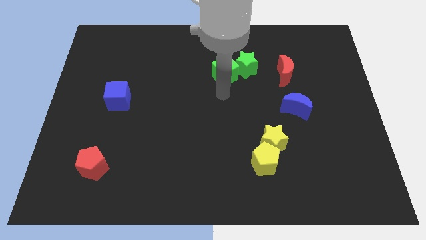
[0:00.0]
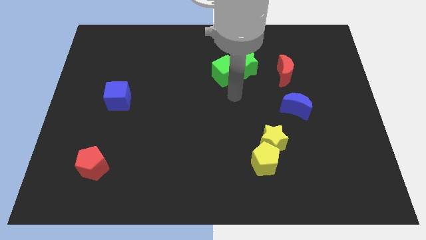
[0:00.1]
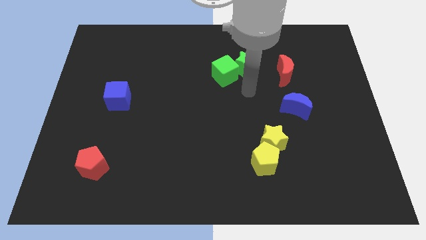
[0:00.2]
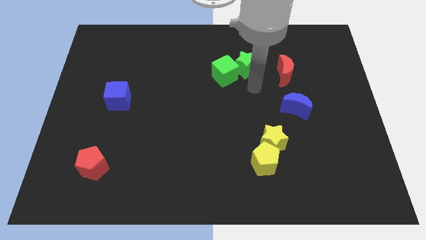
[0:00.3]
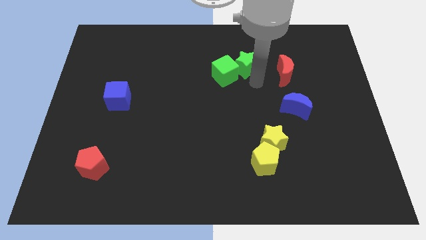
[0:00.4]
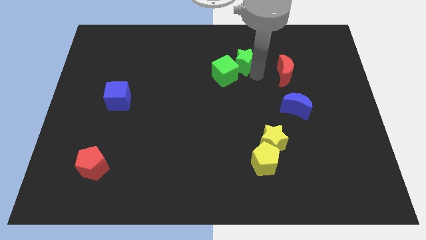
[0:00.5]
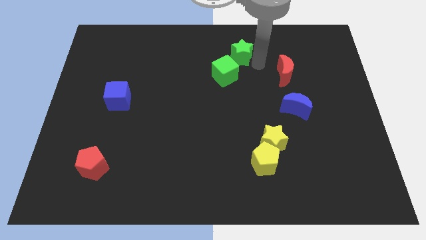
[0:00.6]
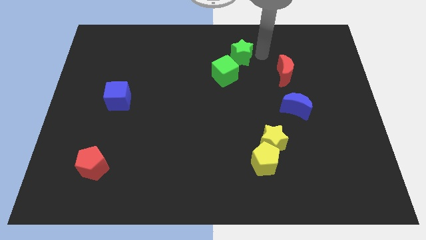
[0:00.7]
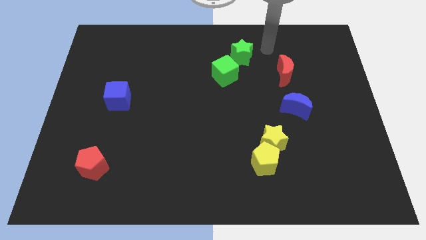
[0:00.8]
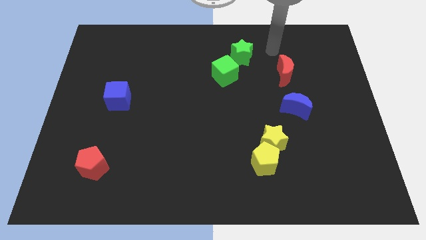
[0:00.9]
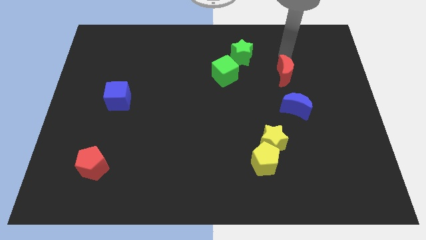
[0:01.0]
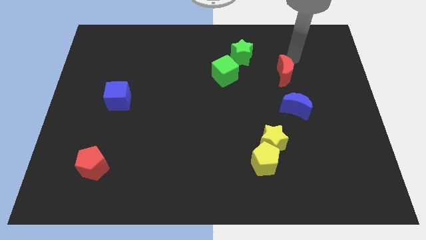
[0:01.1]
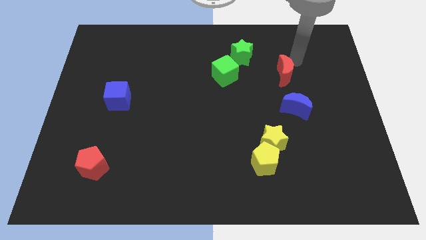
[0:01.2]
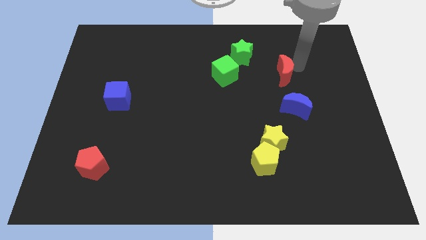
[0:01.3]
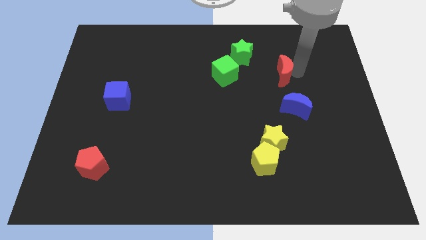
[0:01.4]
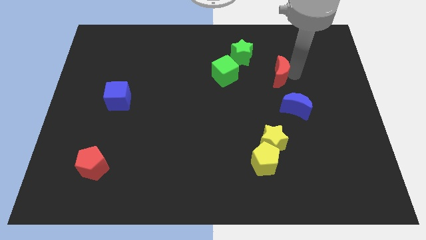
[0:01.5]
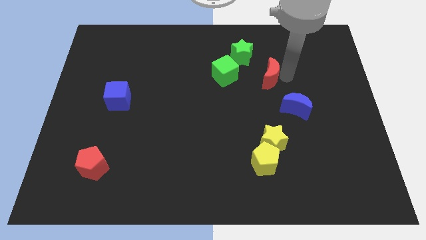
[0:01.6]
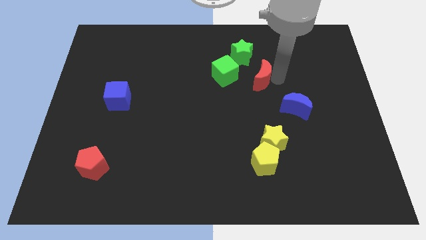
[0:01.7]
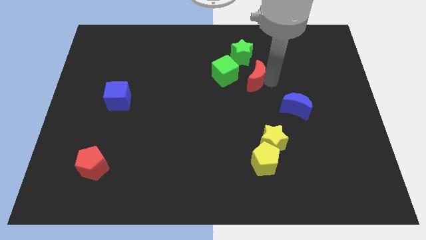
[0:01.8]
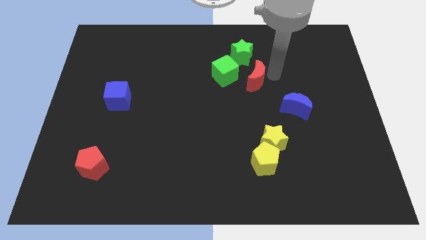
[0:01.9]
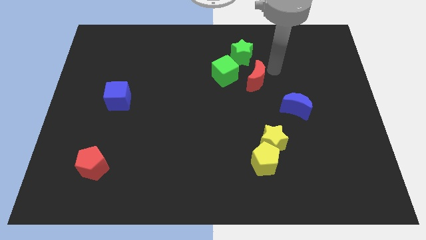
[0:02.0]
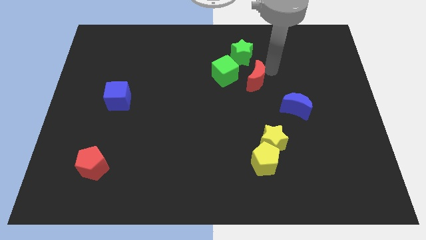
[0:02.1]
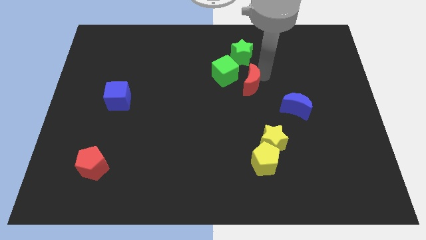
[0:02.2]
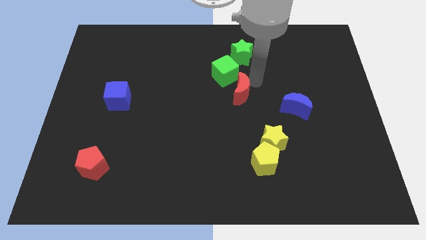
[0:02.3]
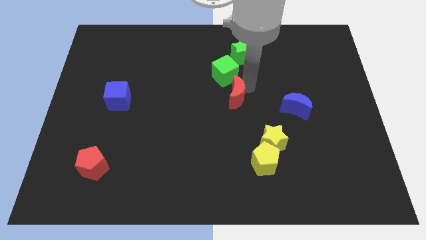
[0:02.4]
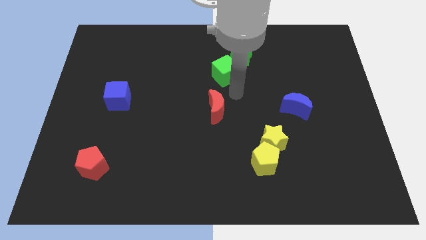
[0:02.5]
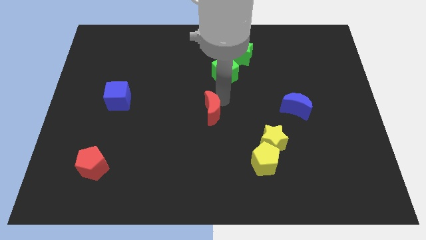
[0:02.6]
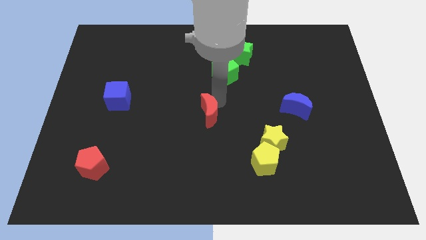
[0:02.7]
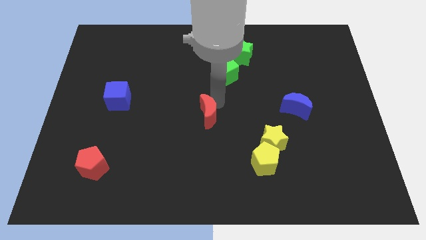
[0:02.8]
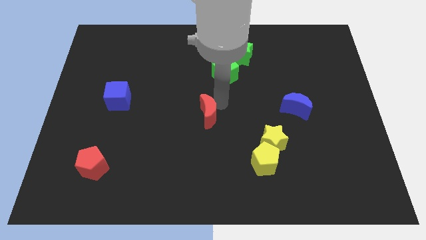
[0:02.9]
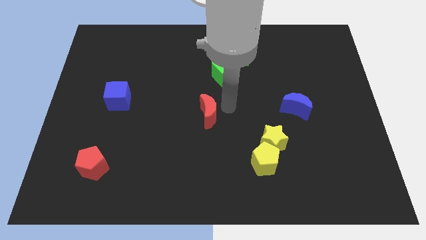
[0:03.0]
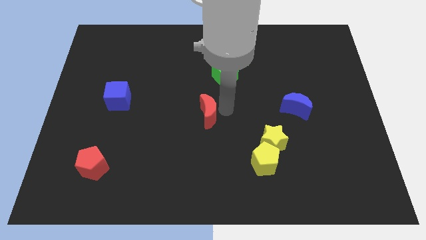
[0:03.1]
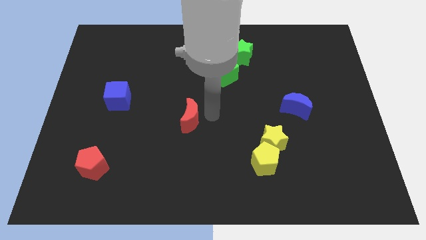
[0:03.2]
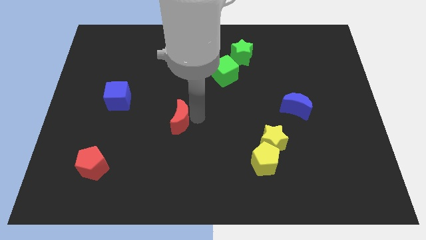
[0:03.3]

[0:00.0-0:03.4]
move red crescent in to center

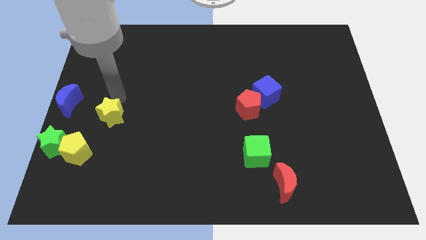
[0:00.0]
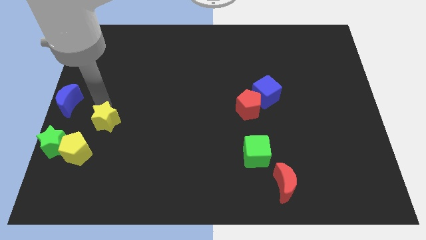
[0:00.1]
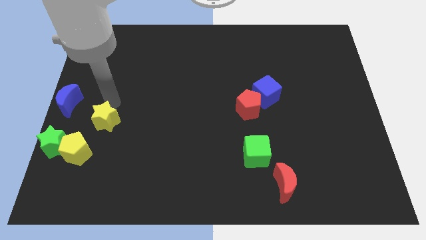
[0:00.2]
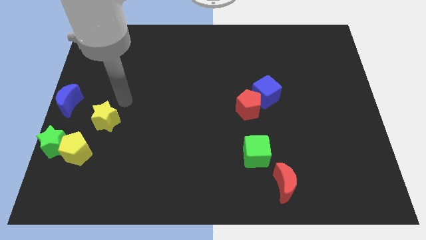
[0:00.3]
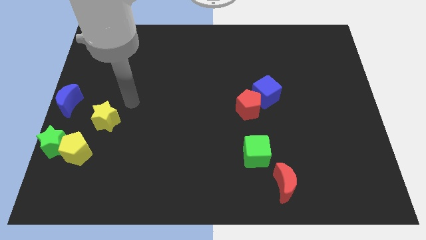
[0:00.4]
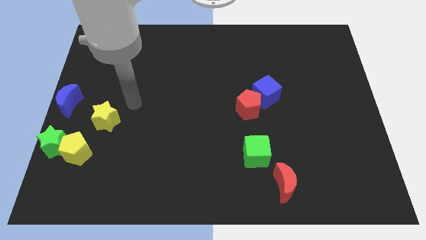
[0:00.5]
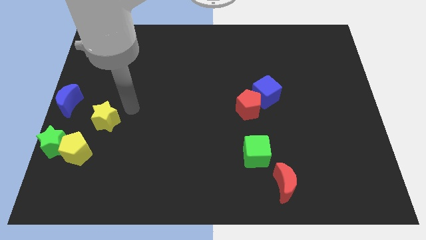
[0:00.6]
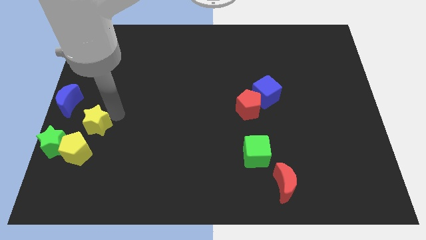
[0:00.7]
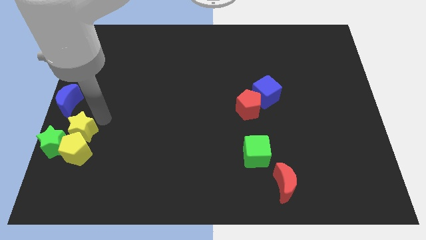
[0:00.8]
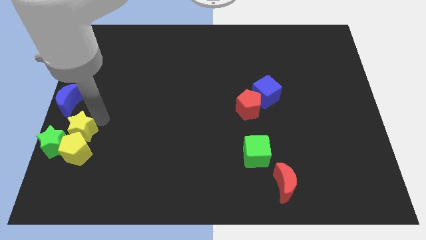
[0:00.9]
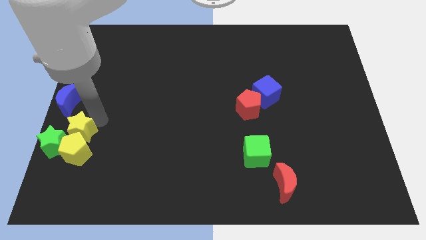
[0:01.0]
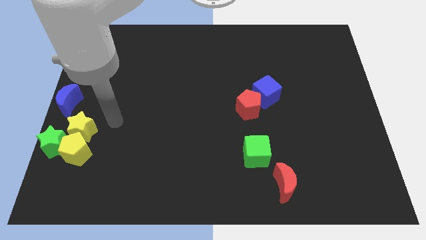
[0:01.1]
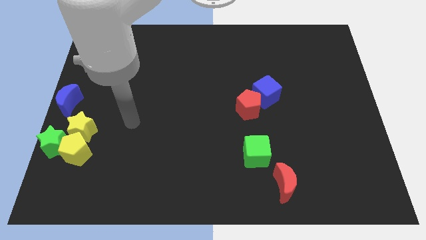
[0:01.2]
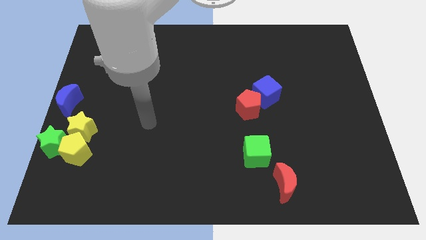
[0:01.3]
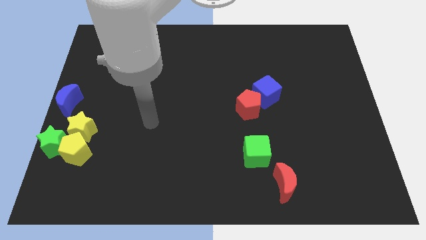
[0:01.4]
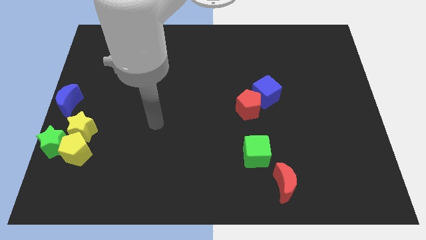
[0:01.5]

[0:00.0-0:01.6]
place the yellow star above the yellow pentagon

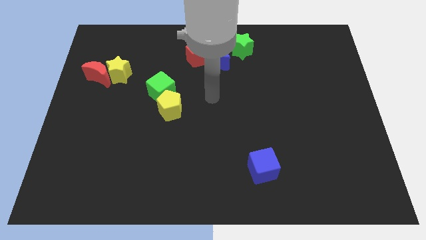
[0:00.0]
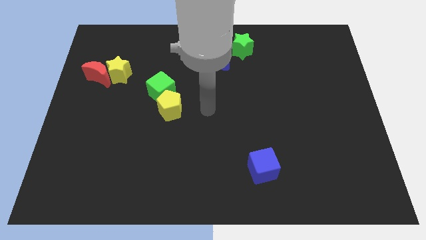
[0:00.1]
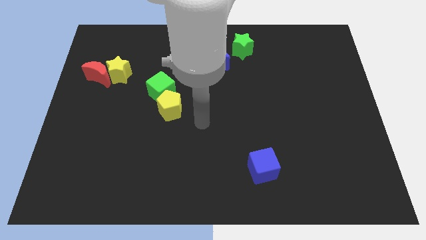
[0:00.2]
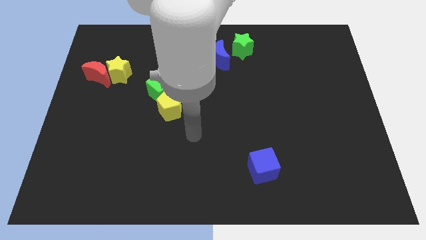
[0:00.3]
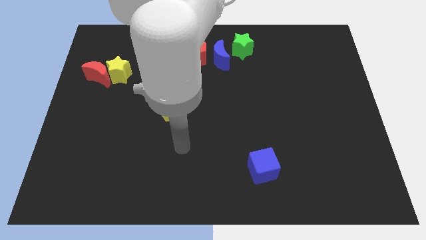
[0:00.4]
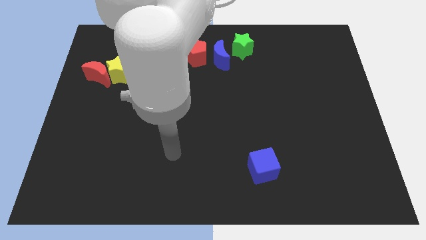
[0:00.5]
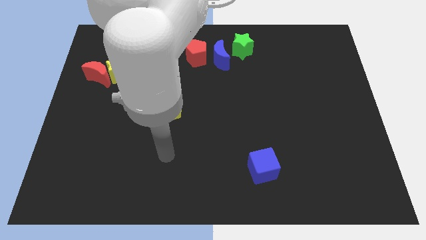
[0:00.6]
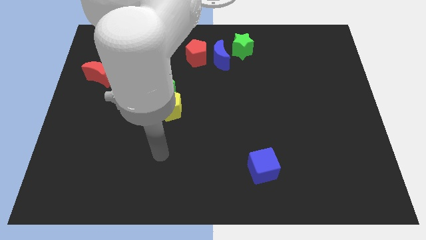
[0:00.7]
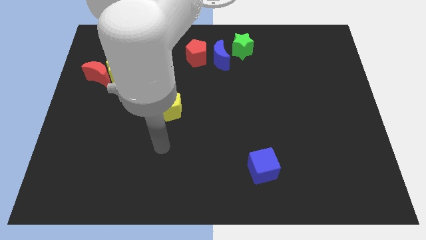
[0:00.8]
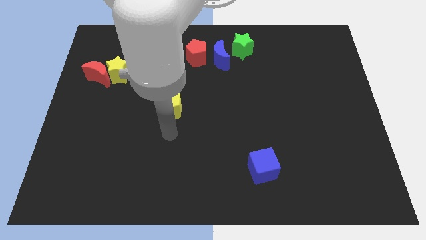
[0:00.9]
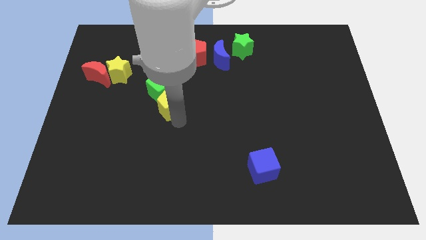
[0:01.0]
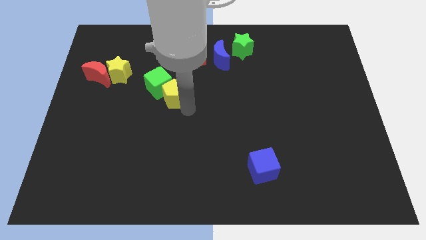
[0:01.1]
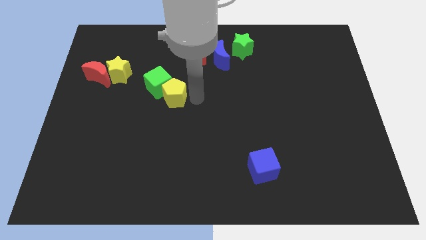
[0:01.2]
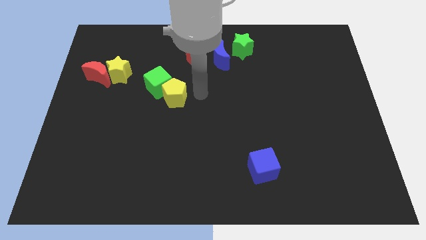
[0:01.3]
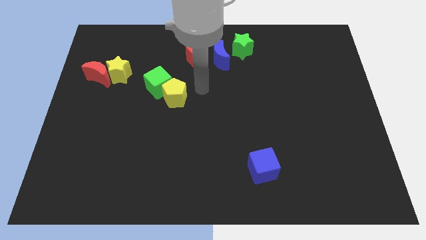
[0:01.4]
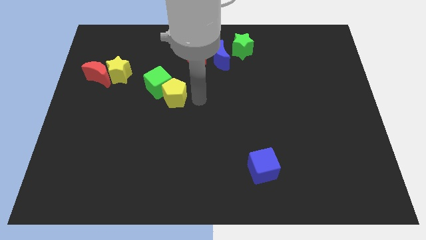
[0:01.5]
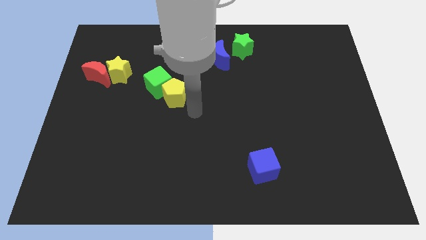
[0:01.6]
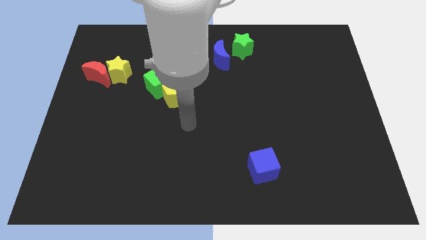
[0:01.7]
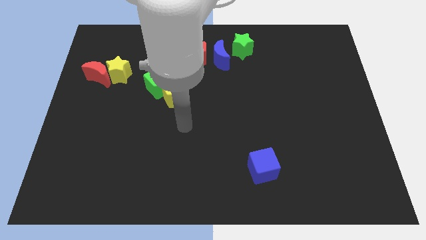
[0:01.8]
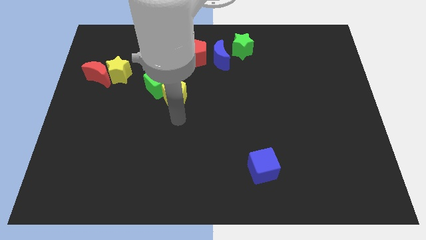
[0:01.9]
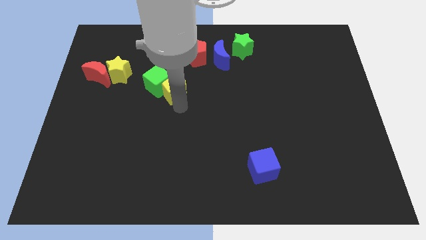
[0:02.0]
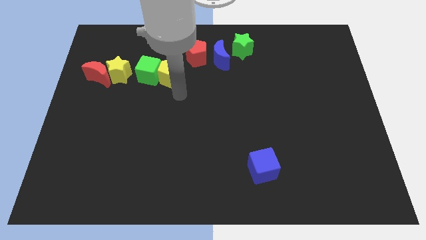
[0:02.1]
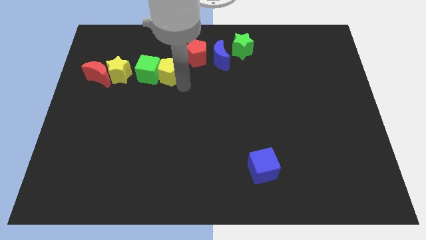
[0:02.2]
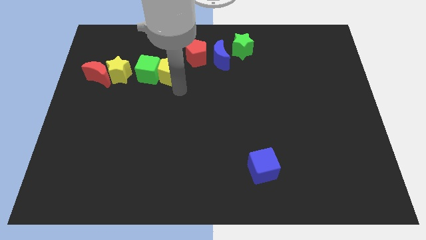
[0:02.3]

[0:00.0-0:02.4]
move the yellow pentagon and green cube to the upwards

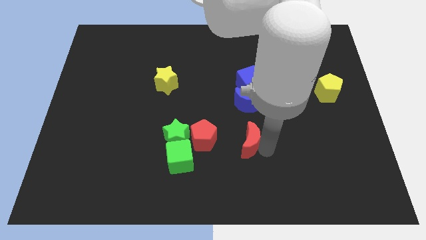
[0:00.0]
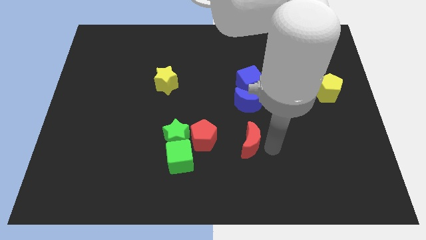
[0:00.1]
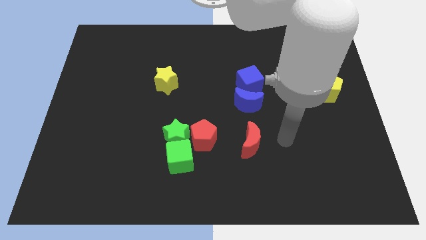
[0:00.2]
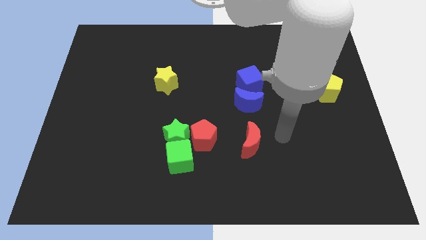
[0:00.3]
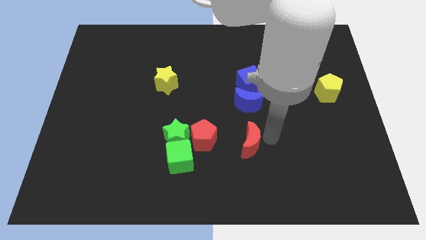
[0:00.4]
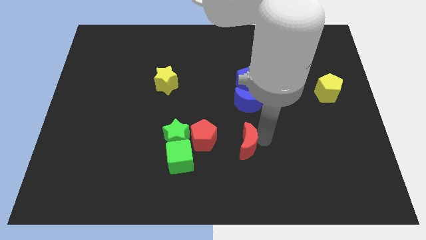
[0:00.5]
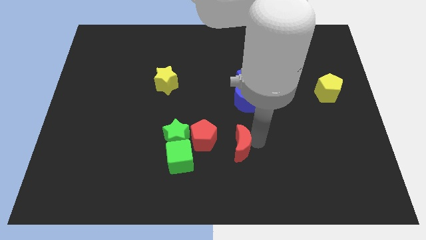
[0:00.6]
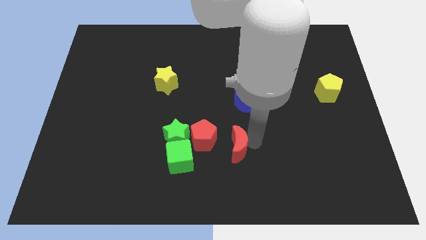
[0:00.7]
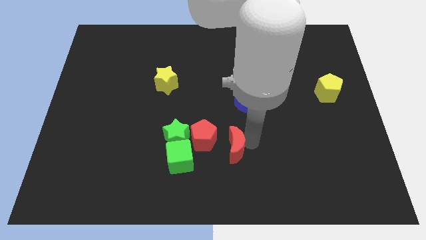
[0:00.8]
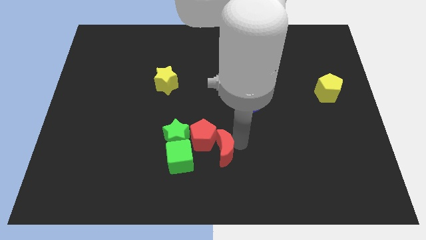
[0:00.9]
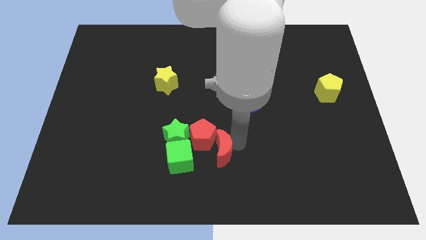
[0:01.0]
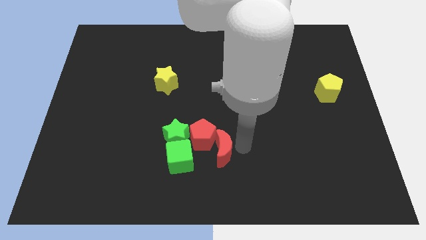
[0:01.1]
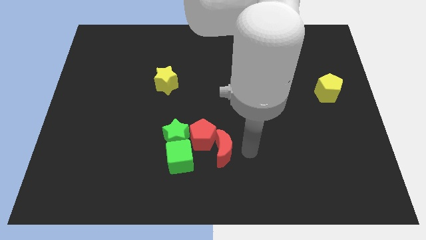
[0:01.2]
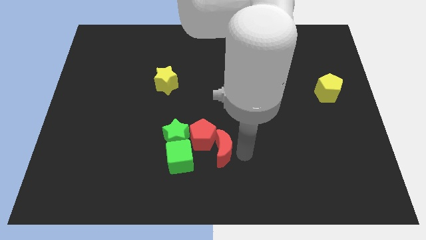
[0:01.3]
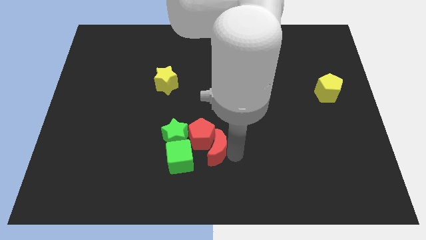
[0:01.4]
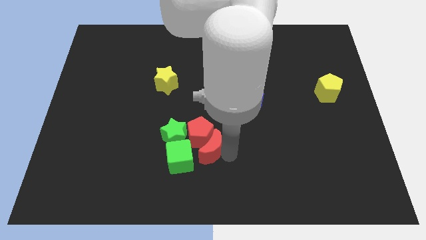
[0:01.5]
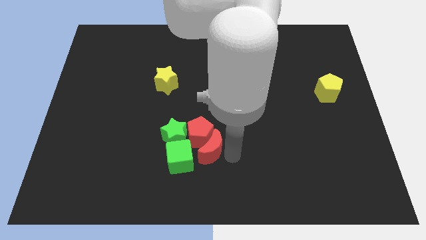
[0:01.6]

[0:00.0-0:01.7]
move the red crescent into the red pentagon

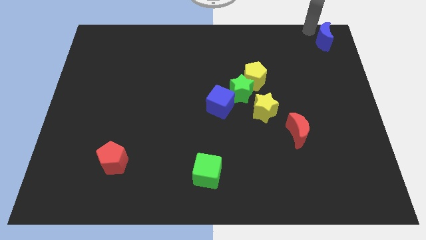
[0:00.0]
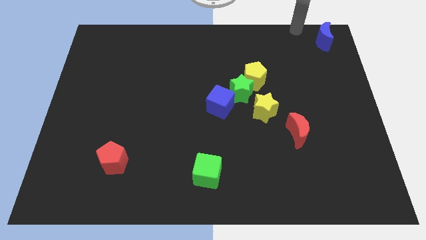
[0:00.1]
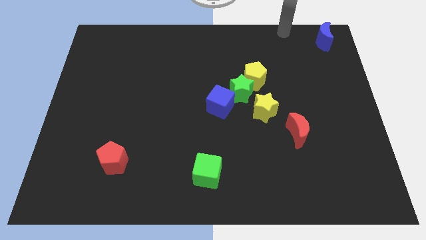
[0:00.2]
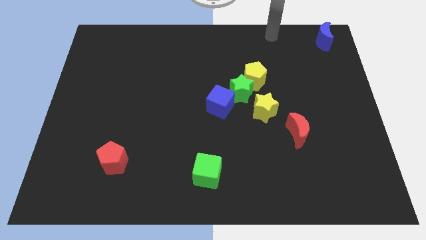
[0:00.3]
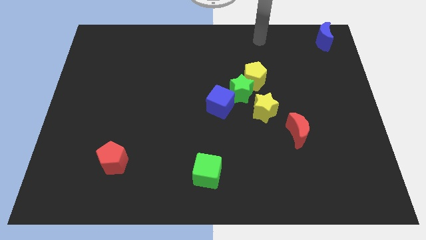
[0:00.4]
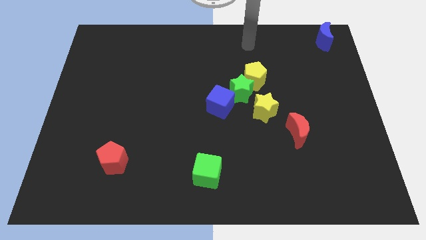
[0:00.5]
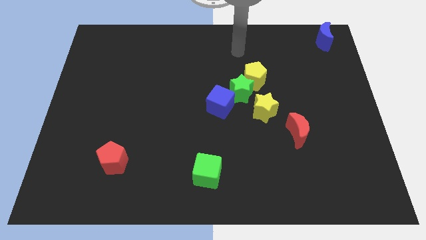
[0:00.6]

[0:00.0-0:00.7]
move the arm away from the blue moon
